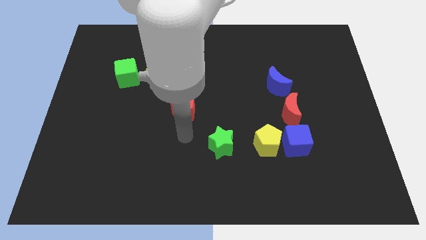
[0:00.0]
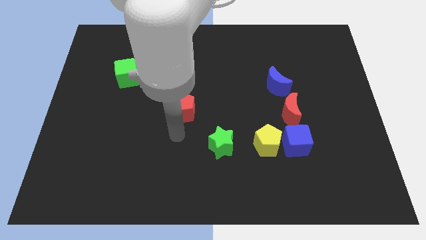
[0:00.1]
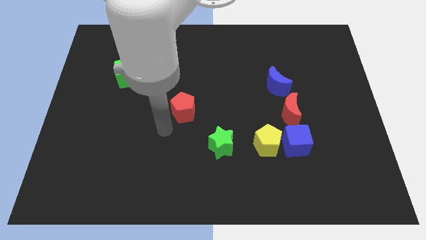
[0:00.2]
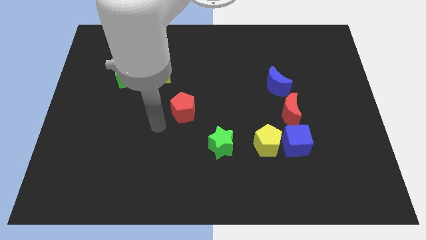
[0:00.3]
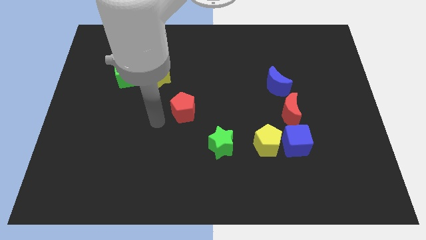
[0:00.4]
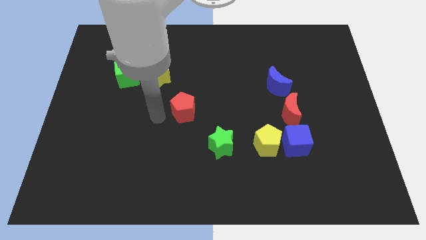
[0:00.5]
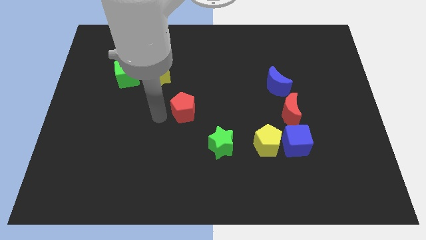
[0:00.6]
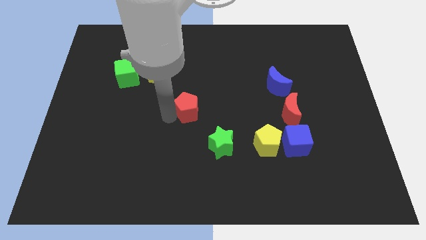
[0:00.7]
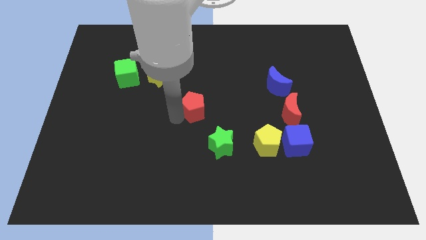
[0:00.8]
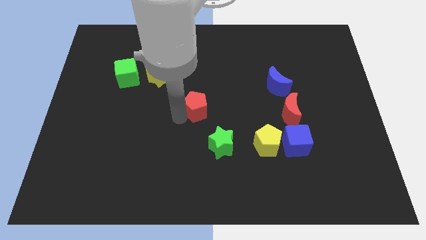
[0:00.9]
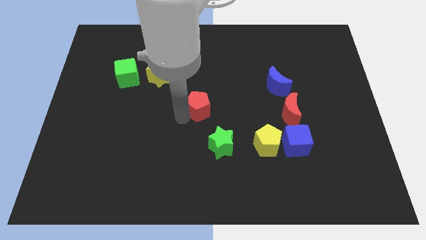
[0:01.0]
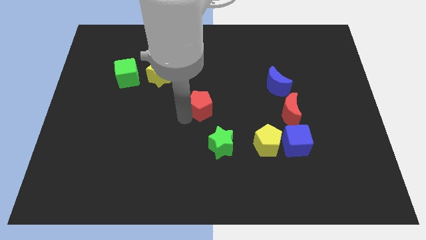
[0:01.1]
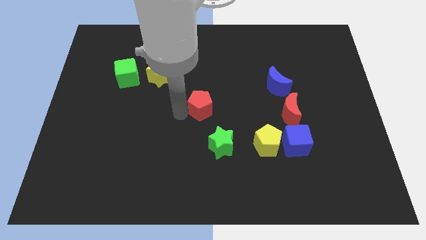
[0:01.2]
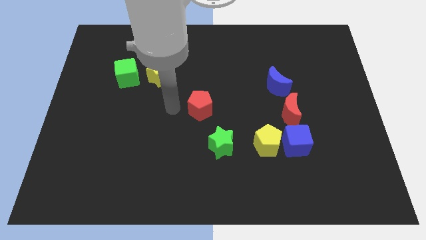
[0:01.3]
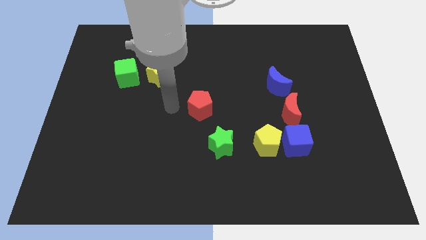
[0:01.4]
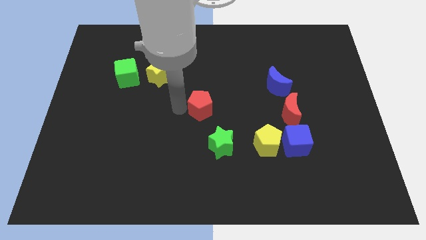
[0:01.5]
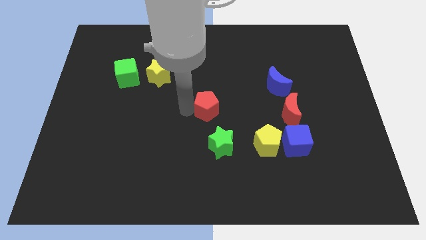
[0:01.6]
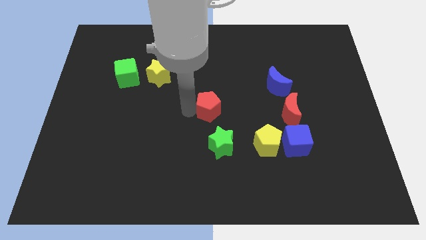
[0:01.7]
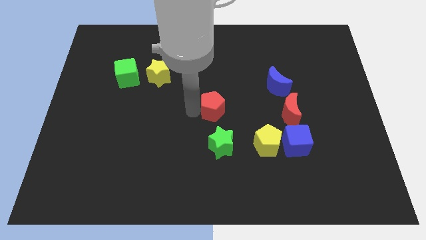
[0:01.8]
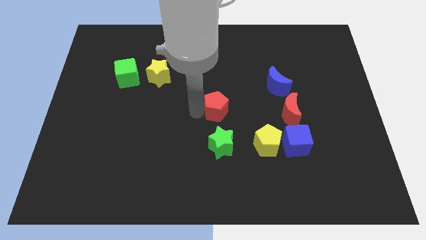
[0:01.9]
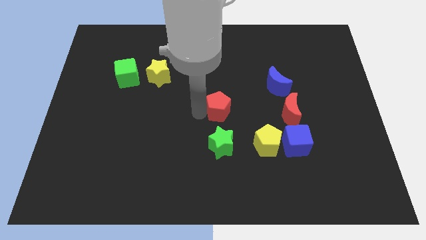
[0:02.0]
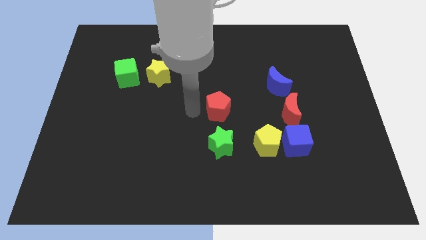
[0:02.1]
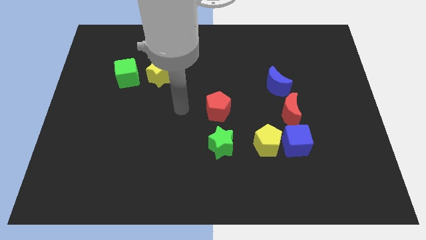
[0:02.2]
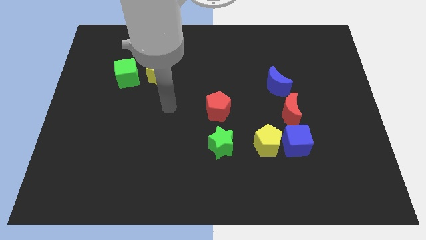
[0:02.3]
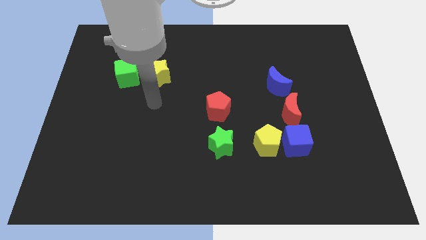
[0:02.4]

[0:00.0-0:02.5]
place the red pentagon above the green star

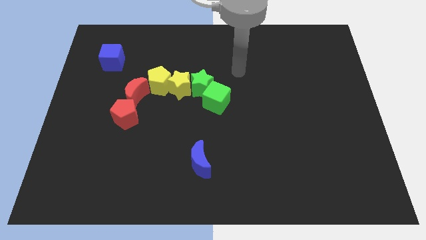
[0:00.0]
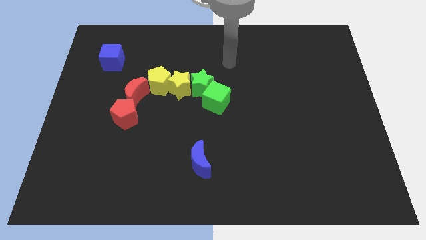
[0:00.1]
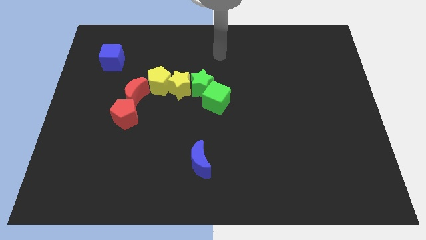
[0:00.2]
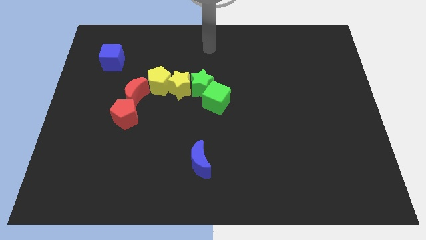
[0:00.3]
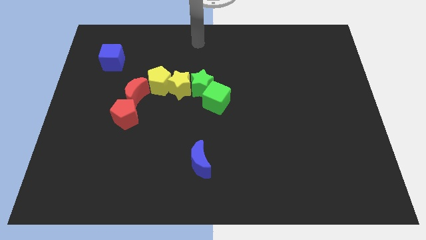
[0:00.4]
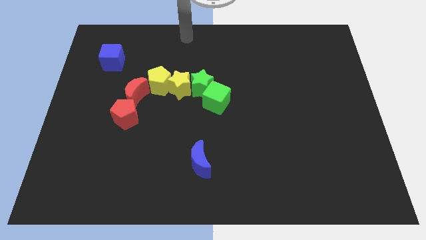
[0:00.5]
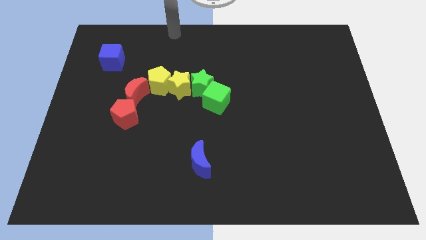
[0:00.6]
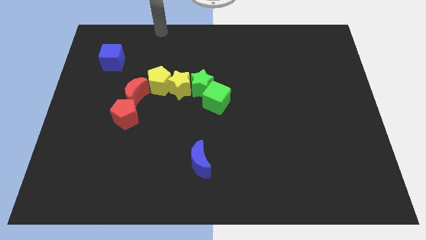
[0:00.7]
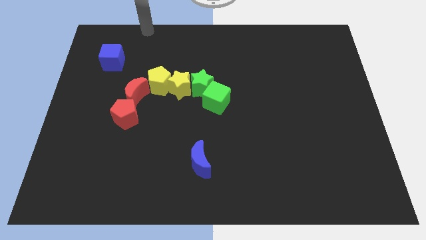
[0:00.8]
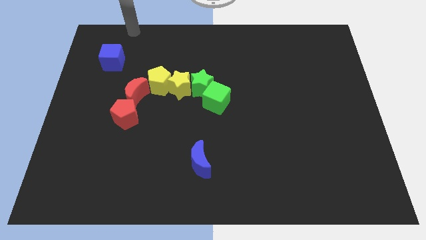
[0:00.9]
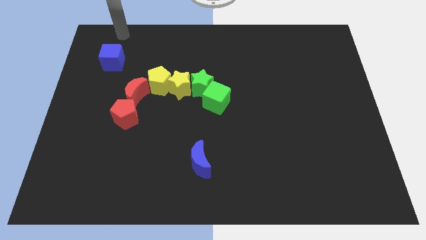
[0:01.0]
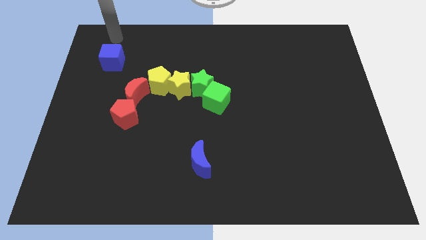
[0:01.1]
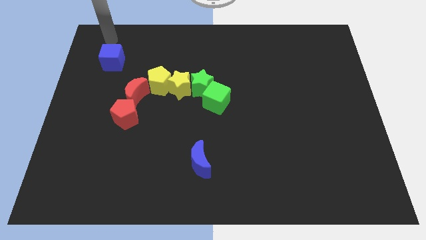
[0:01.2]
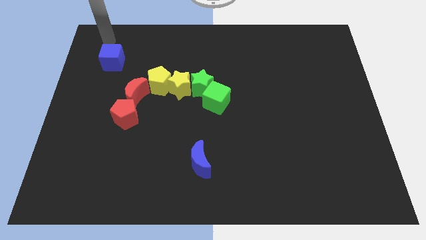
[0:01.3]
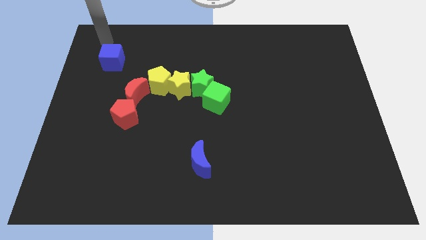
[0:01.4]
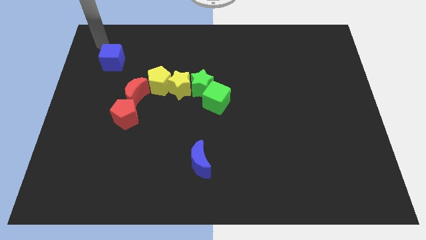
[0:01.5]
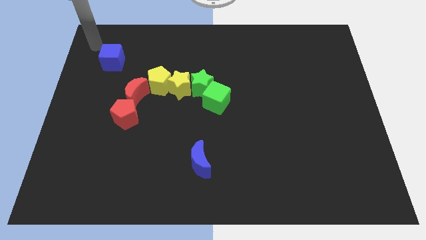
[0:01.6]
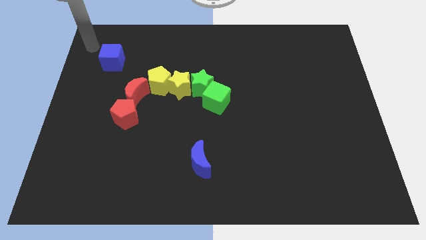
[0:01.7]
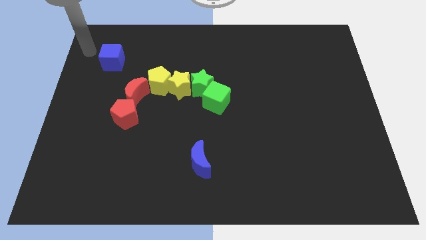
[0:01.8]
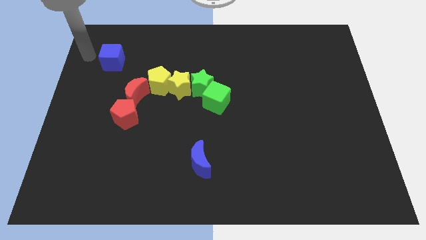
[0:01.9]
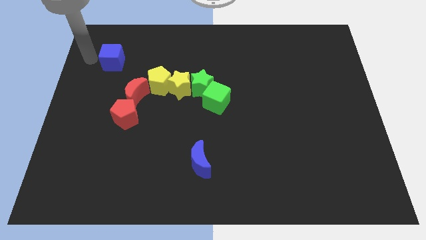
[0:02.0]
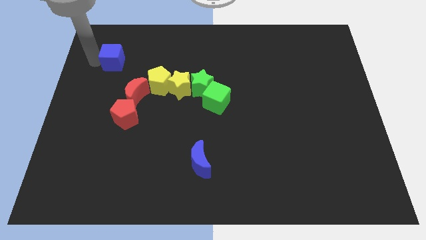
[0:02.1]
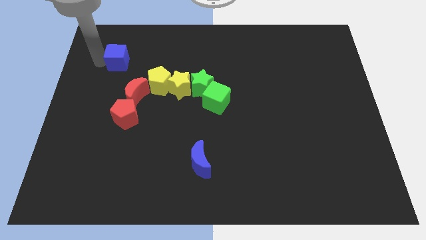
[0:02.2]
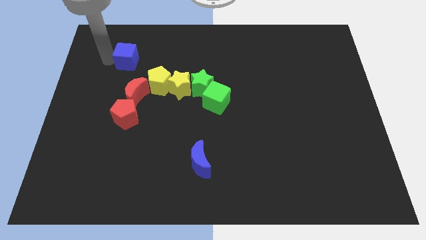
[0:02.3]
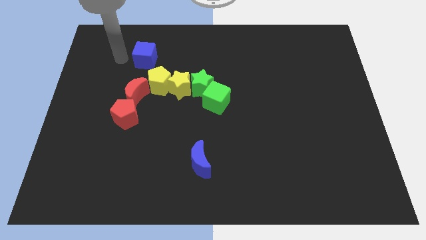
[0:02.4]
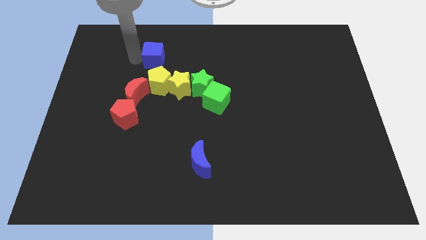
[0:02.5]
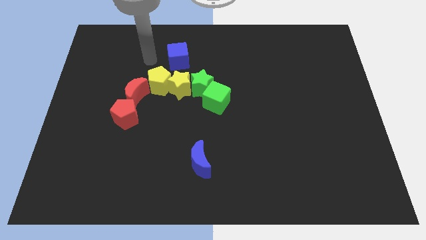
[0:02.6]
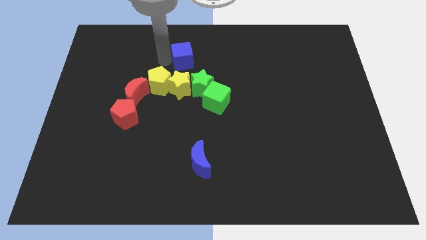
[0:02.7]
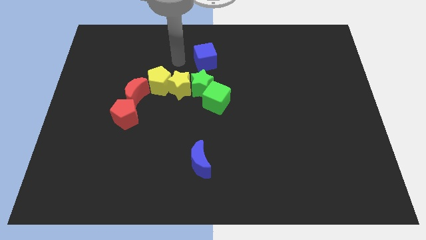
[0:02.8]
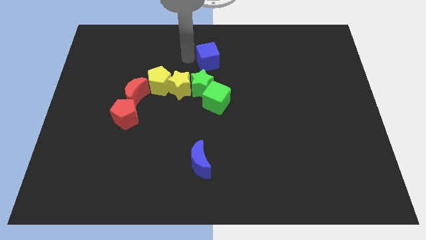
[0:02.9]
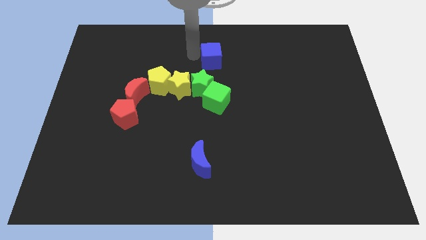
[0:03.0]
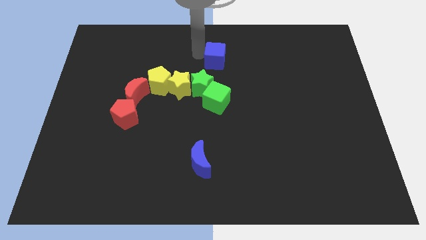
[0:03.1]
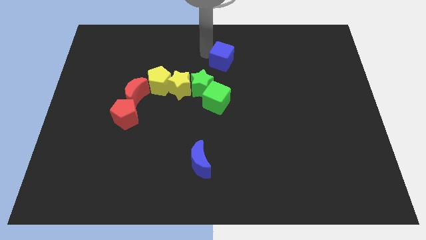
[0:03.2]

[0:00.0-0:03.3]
place the blue cube at the top of the green star

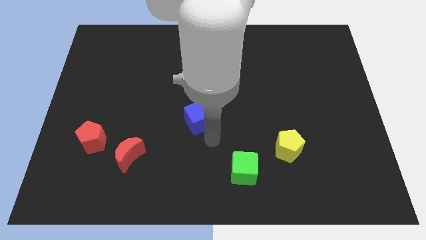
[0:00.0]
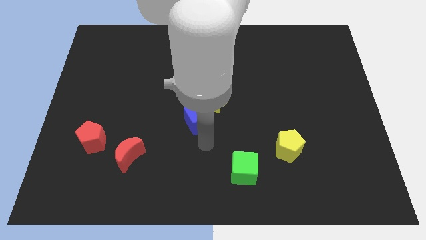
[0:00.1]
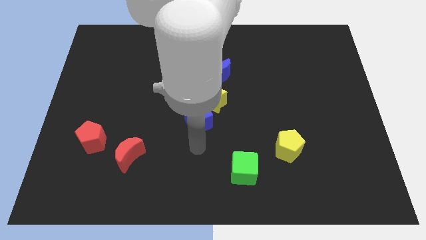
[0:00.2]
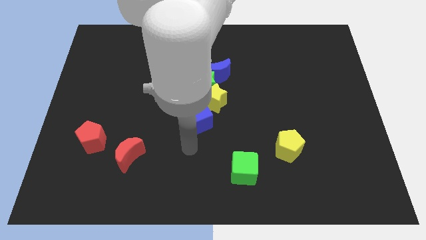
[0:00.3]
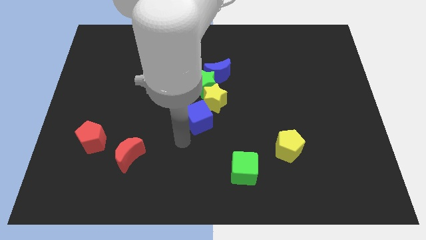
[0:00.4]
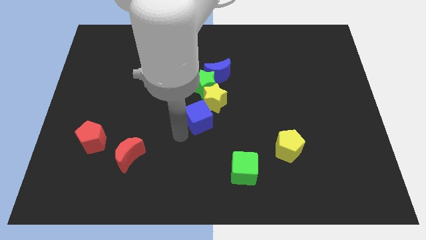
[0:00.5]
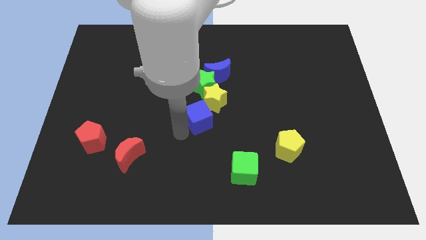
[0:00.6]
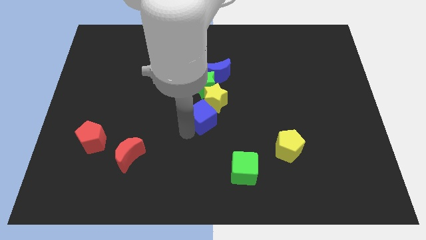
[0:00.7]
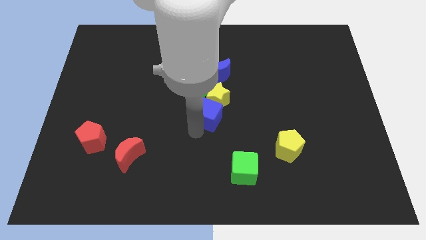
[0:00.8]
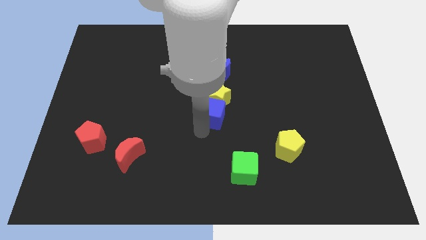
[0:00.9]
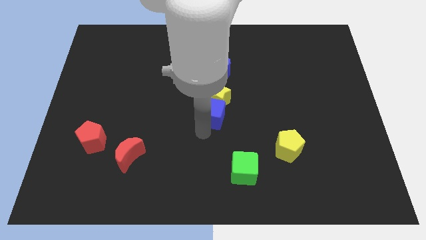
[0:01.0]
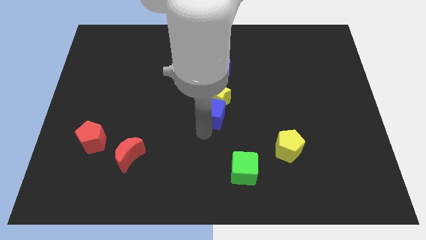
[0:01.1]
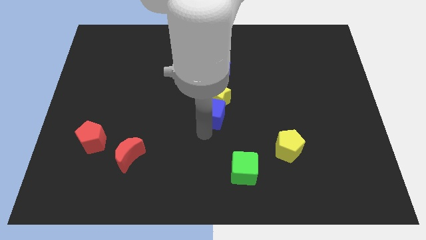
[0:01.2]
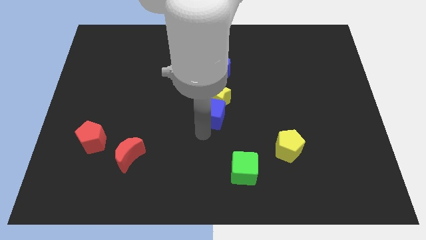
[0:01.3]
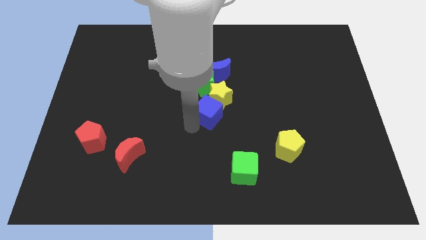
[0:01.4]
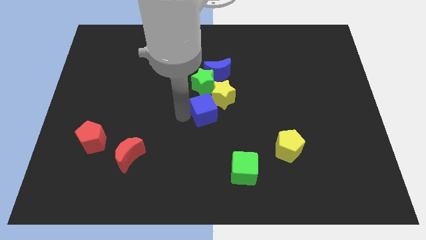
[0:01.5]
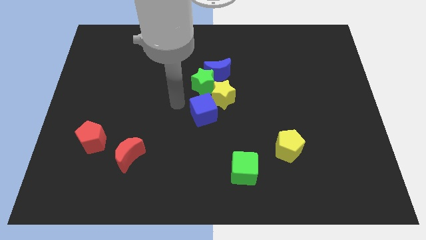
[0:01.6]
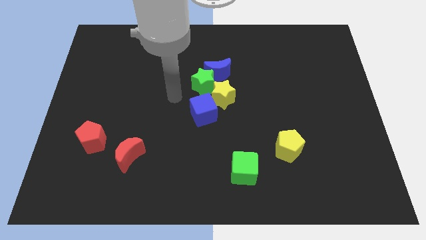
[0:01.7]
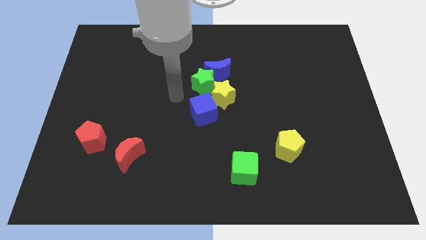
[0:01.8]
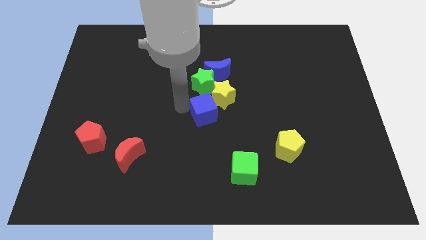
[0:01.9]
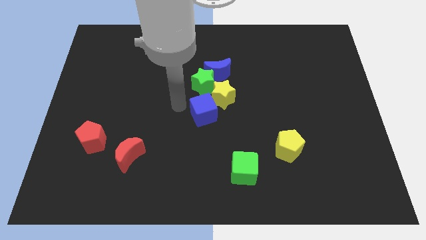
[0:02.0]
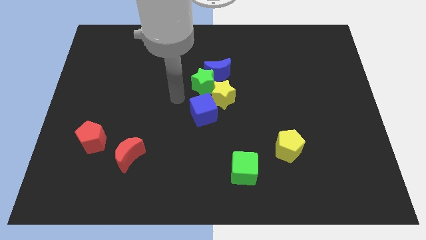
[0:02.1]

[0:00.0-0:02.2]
move the blue cube into the yellow star

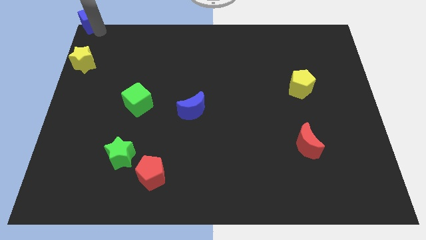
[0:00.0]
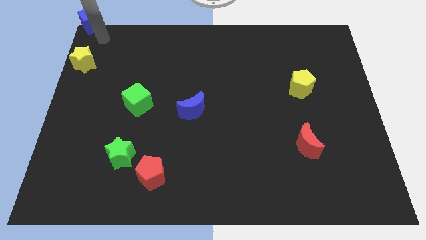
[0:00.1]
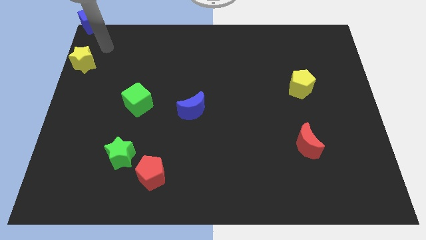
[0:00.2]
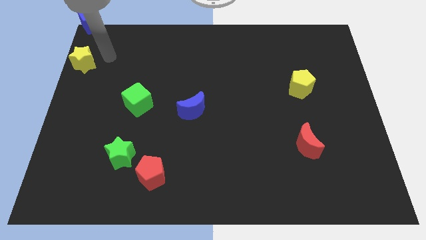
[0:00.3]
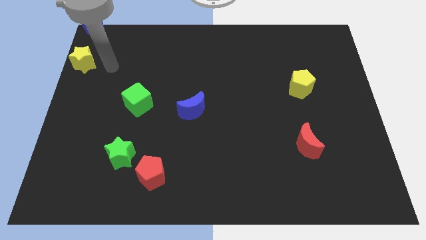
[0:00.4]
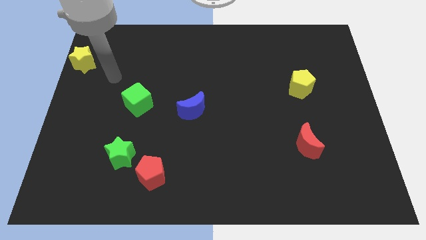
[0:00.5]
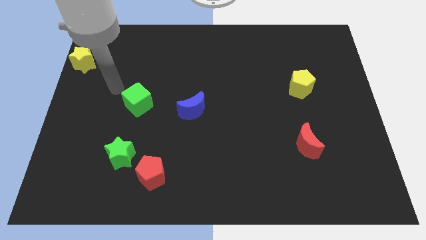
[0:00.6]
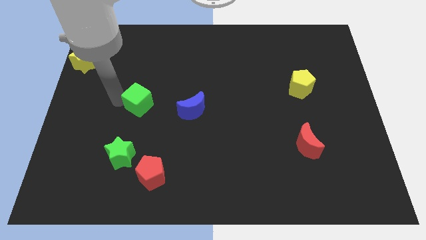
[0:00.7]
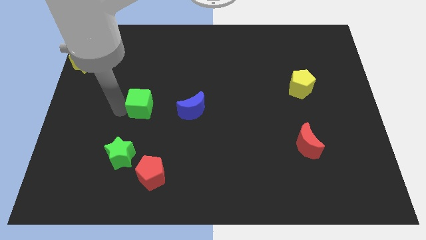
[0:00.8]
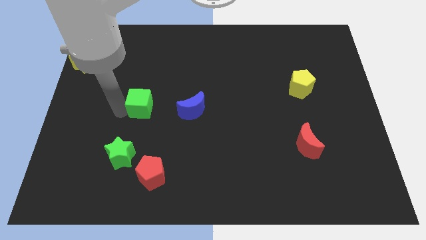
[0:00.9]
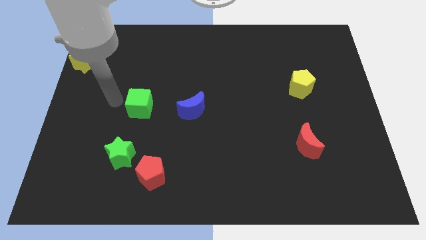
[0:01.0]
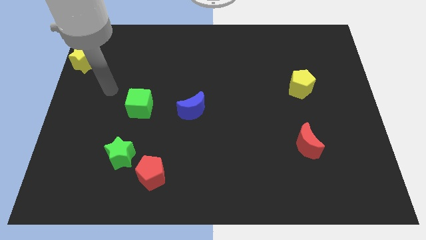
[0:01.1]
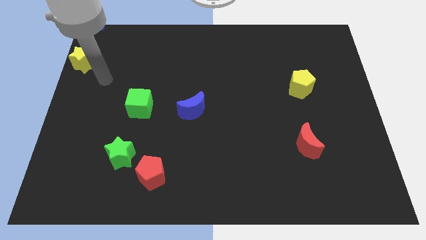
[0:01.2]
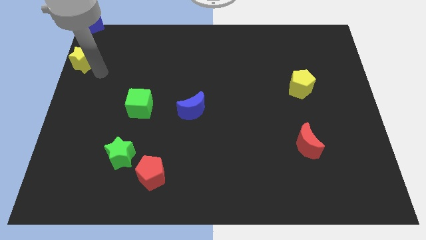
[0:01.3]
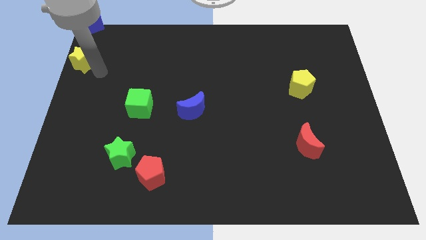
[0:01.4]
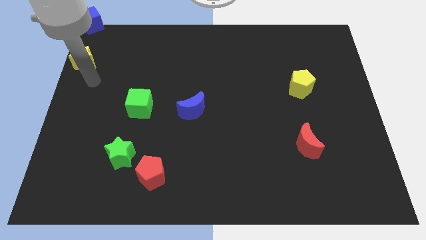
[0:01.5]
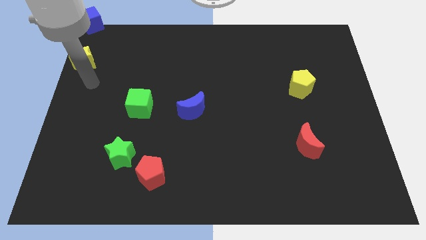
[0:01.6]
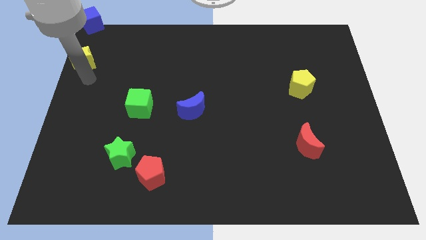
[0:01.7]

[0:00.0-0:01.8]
slightly push the green cube above green star
